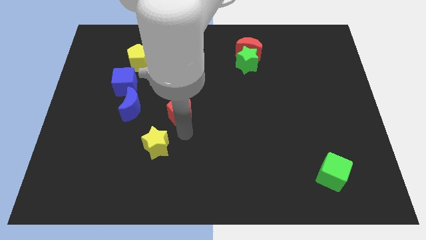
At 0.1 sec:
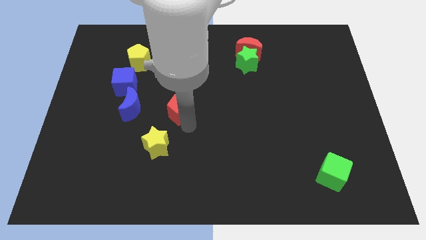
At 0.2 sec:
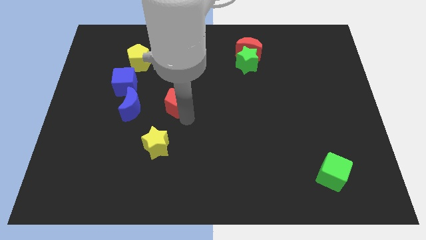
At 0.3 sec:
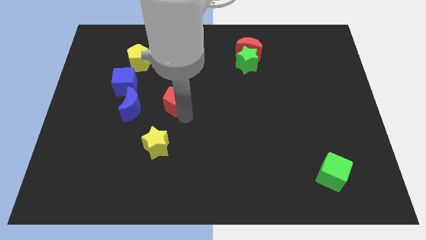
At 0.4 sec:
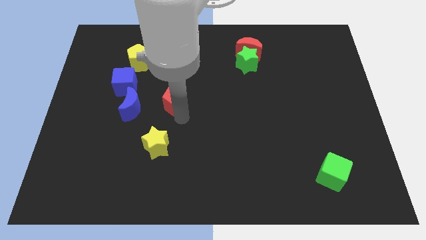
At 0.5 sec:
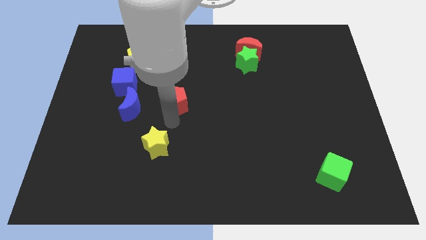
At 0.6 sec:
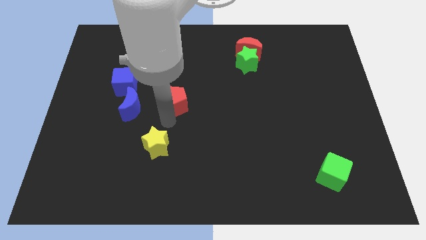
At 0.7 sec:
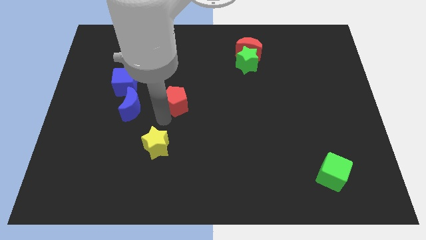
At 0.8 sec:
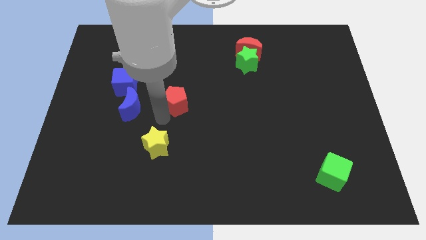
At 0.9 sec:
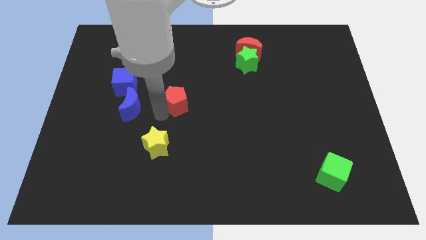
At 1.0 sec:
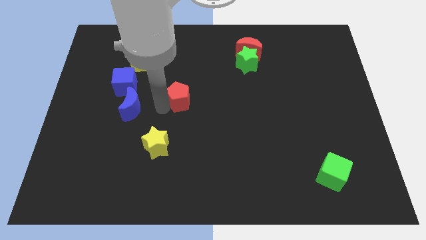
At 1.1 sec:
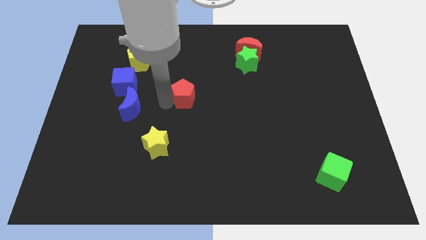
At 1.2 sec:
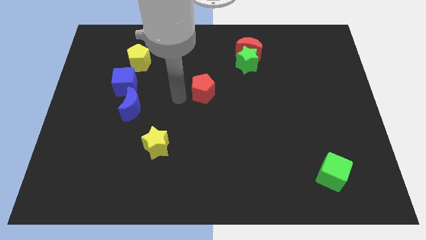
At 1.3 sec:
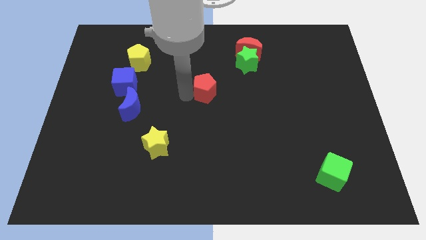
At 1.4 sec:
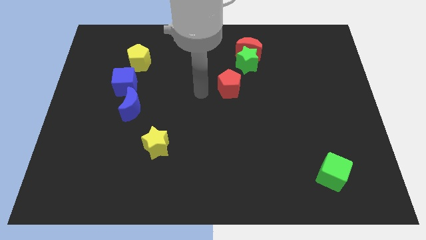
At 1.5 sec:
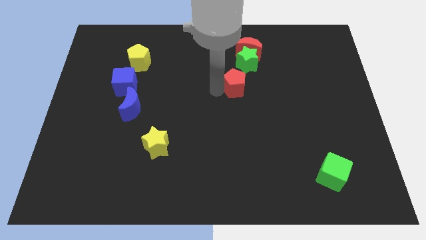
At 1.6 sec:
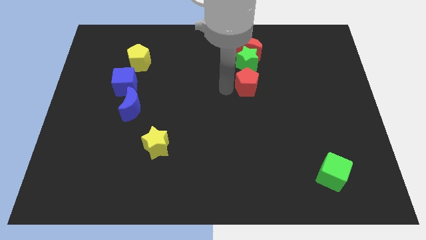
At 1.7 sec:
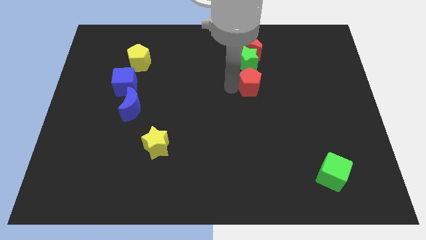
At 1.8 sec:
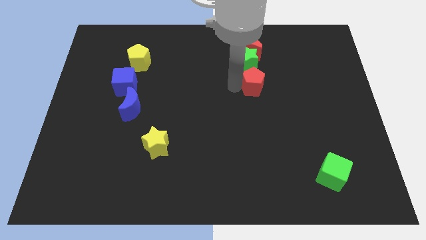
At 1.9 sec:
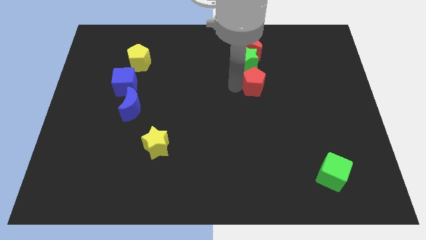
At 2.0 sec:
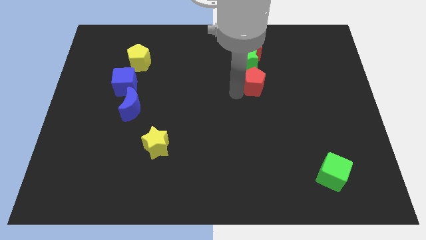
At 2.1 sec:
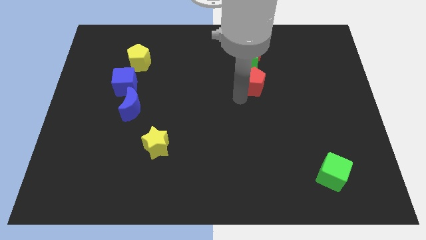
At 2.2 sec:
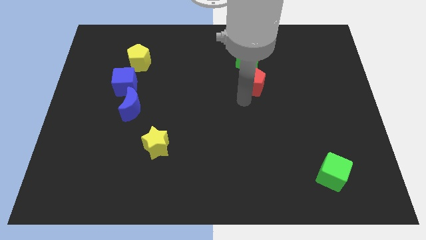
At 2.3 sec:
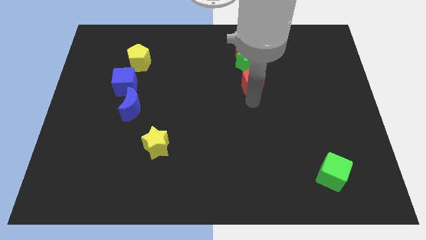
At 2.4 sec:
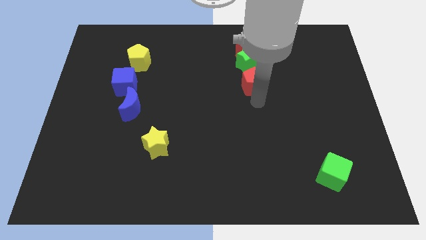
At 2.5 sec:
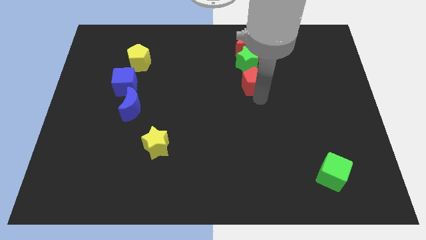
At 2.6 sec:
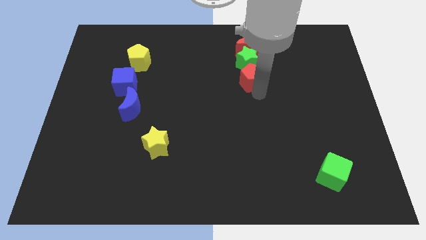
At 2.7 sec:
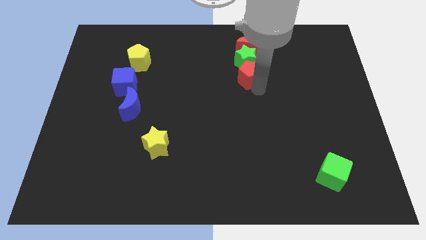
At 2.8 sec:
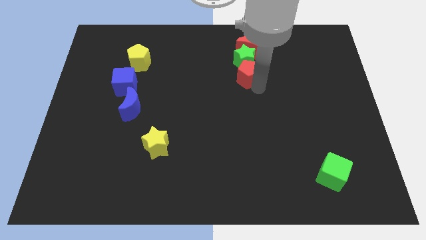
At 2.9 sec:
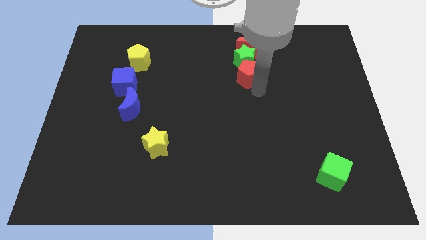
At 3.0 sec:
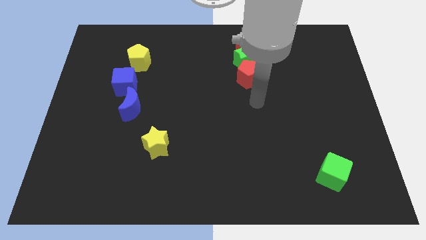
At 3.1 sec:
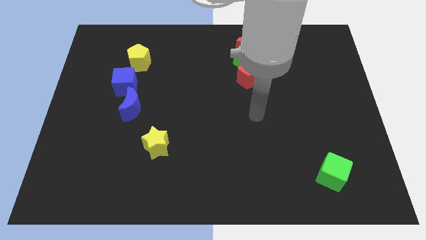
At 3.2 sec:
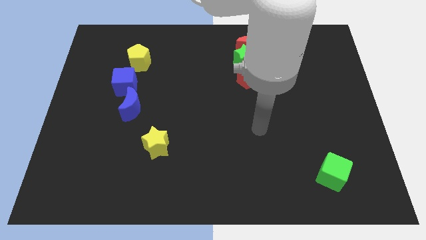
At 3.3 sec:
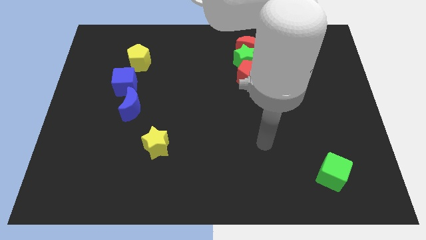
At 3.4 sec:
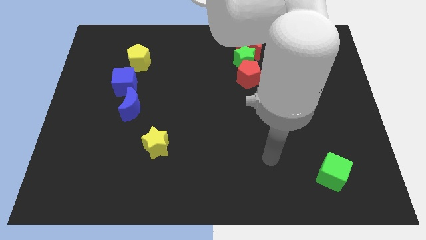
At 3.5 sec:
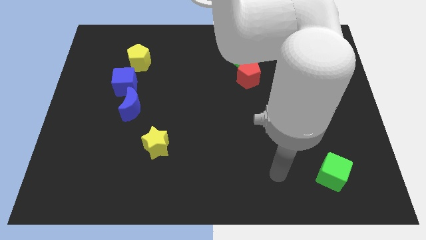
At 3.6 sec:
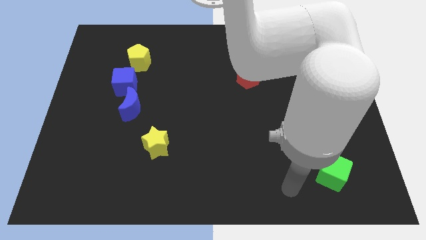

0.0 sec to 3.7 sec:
push red pentagon into the green star

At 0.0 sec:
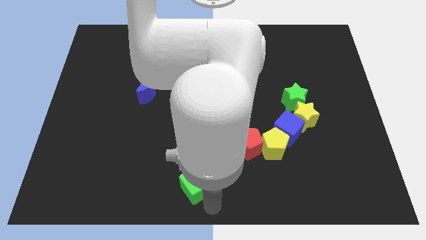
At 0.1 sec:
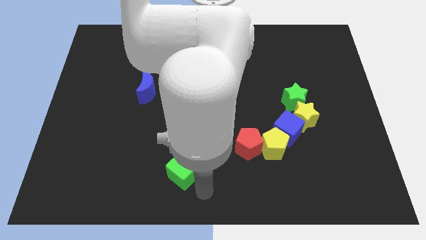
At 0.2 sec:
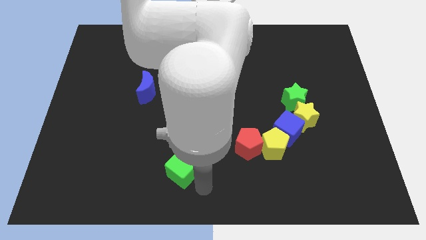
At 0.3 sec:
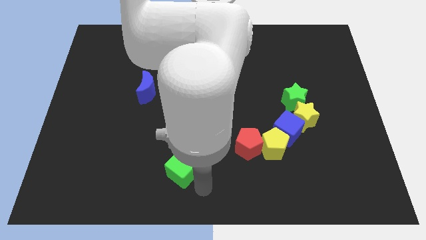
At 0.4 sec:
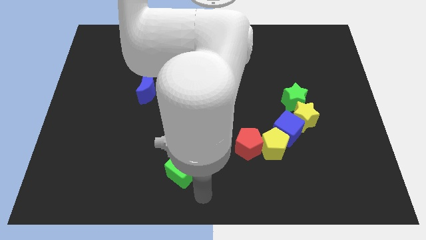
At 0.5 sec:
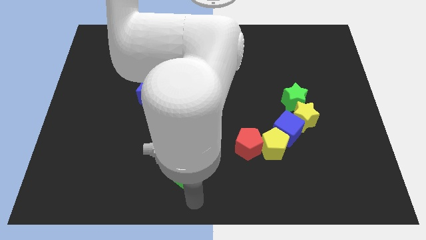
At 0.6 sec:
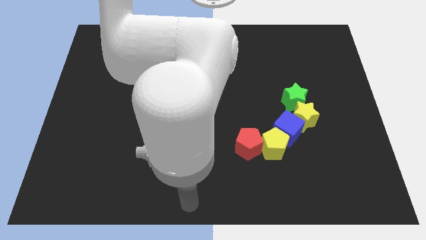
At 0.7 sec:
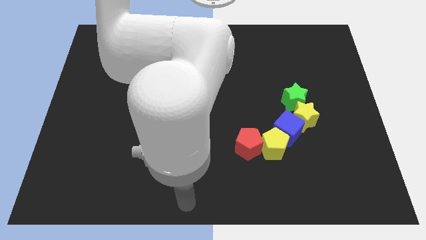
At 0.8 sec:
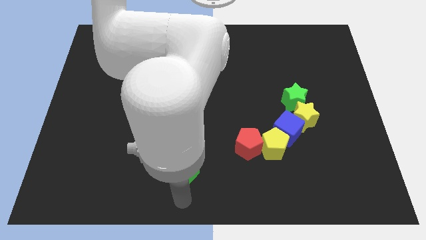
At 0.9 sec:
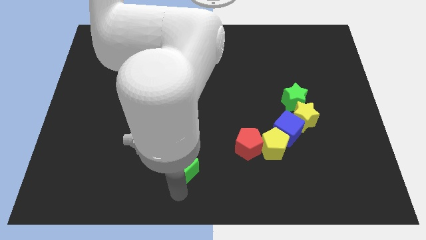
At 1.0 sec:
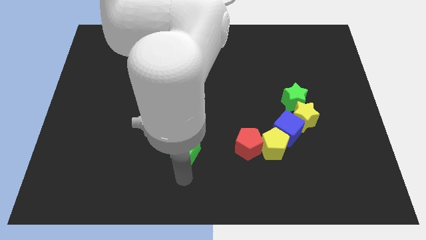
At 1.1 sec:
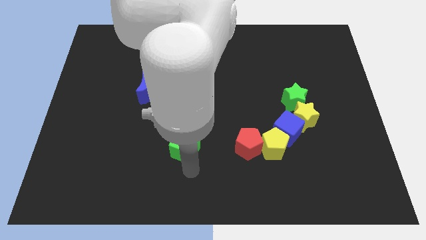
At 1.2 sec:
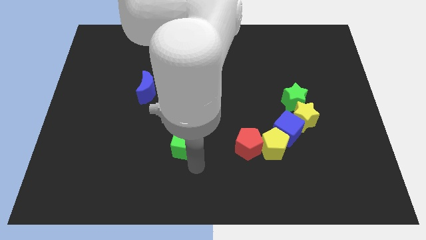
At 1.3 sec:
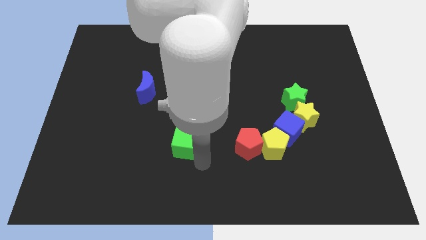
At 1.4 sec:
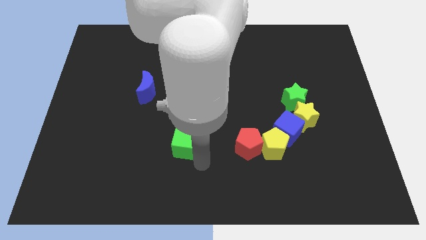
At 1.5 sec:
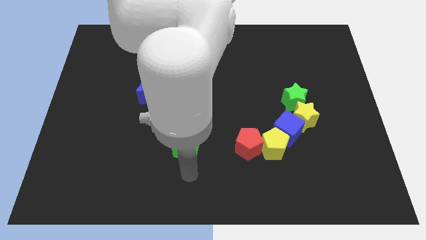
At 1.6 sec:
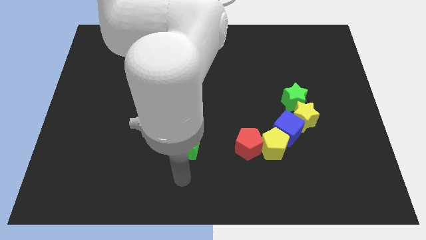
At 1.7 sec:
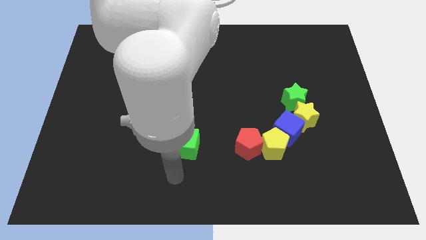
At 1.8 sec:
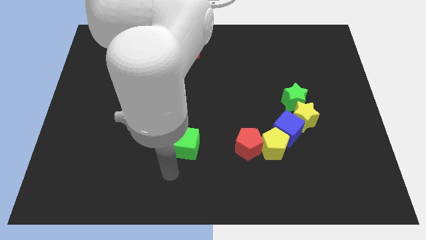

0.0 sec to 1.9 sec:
move the green cube to the left of the red pentagon

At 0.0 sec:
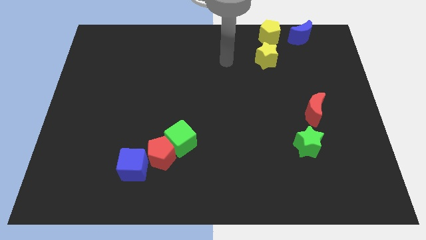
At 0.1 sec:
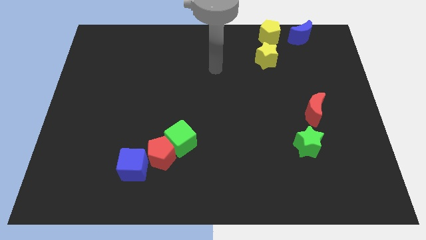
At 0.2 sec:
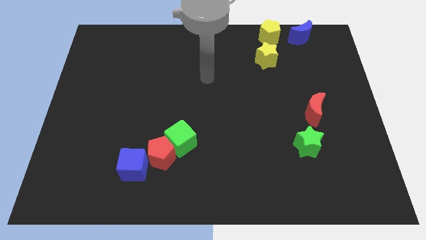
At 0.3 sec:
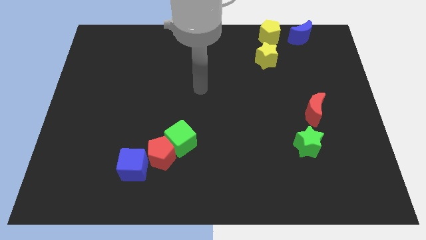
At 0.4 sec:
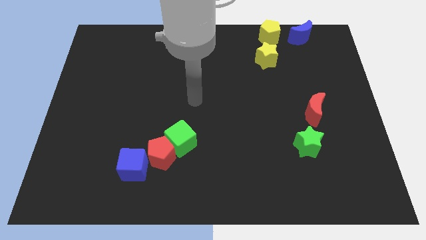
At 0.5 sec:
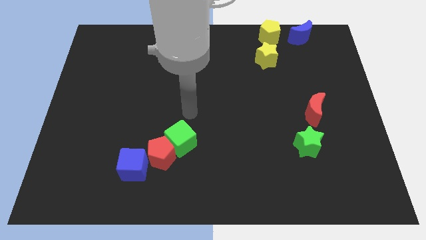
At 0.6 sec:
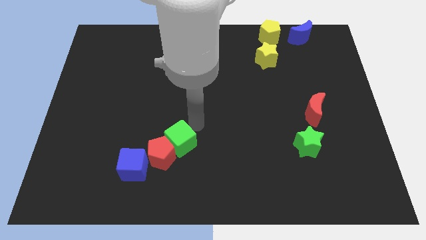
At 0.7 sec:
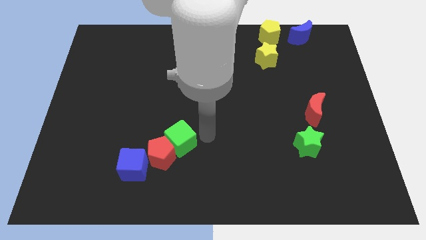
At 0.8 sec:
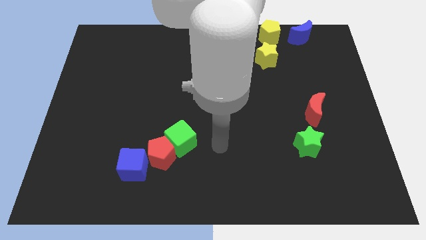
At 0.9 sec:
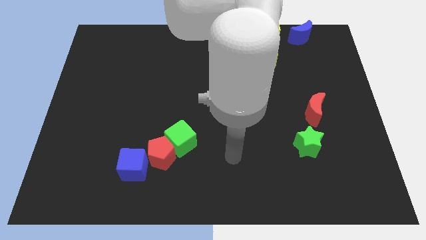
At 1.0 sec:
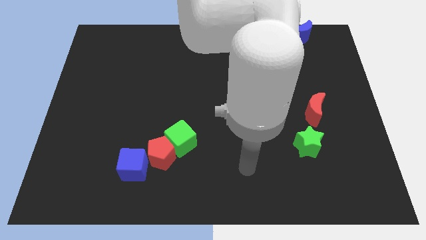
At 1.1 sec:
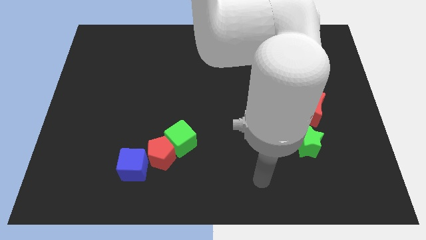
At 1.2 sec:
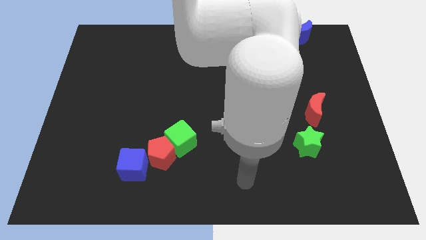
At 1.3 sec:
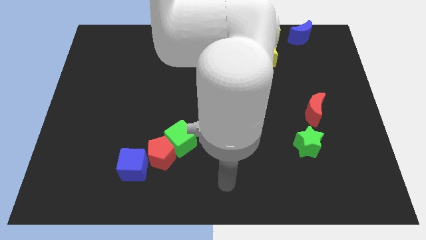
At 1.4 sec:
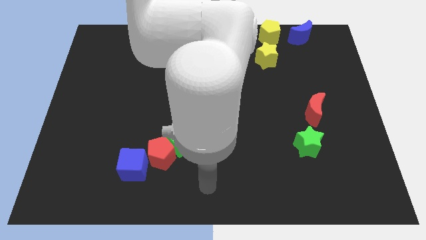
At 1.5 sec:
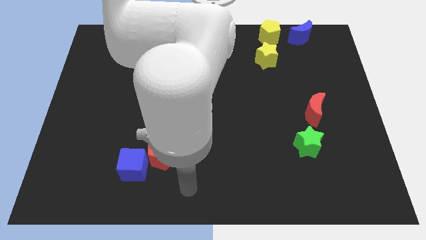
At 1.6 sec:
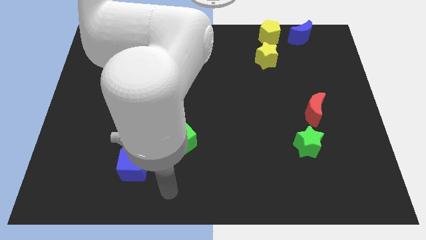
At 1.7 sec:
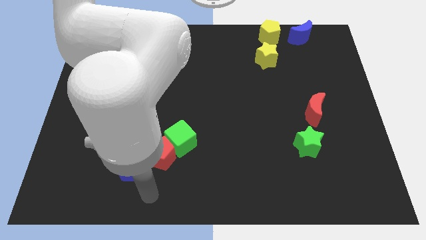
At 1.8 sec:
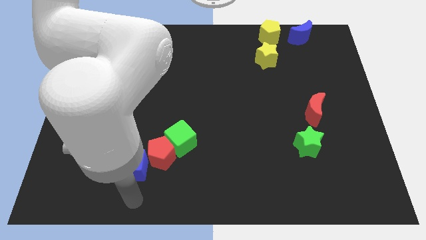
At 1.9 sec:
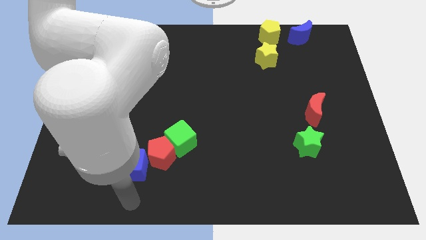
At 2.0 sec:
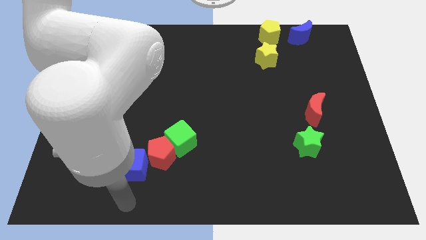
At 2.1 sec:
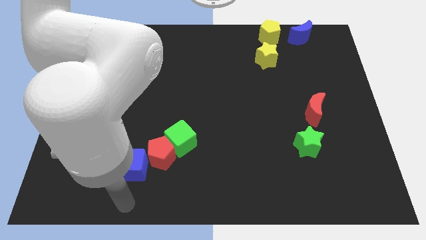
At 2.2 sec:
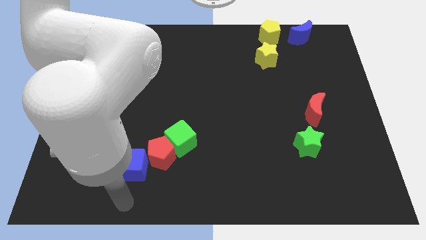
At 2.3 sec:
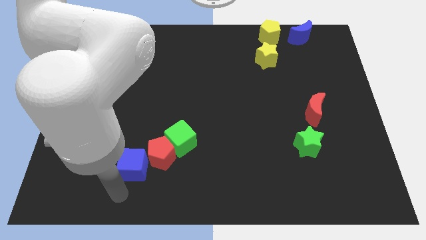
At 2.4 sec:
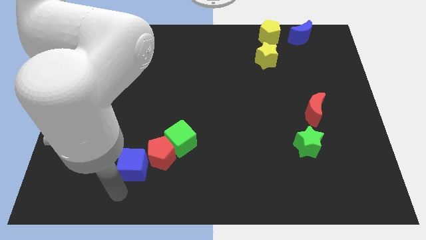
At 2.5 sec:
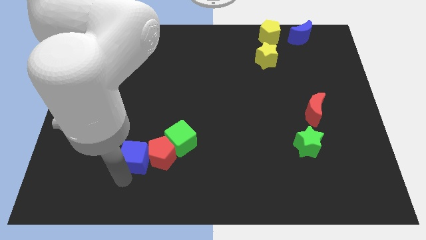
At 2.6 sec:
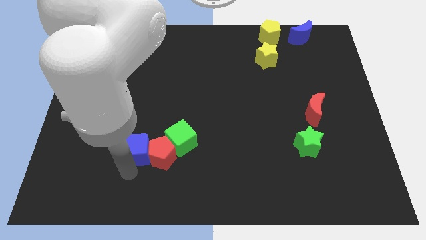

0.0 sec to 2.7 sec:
move your arm to the blue cube

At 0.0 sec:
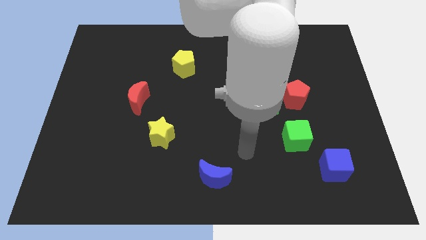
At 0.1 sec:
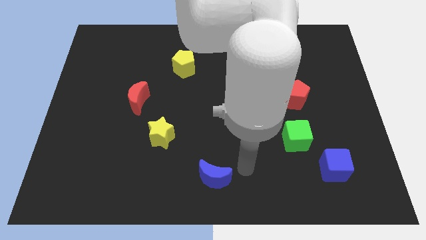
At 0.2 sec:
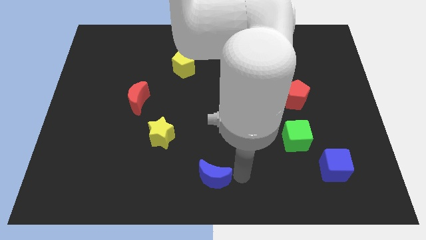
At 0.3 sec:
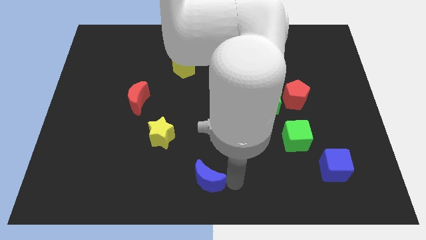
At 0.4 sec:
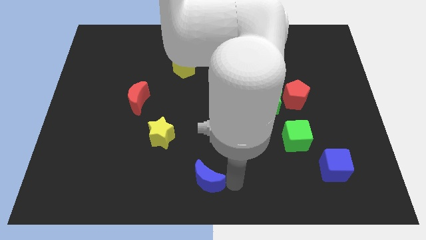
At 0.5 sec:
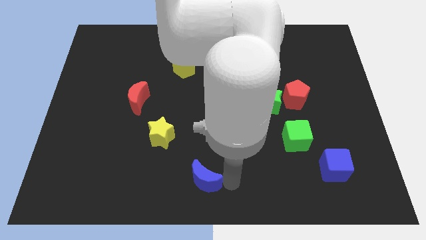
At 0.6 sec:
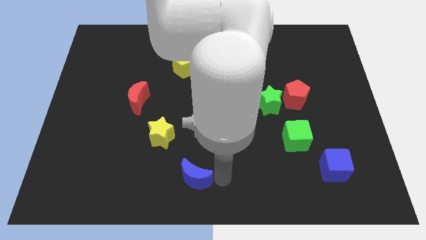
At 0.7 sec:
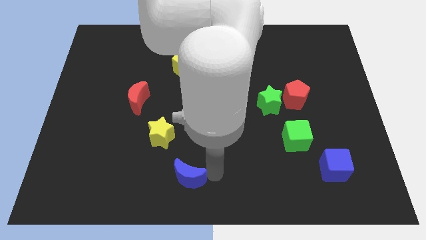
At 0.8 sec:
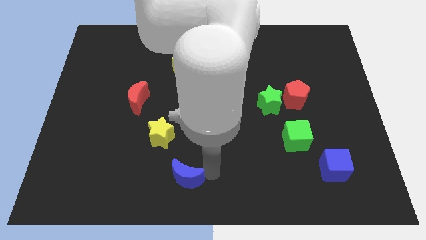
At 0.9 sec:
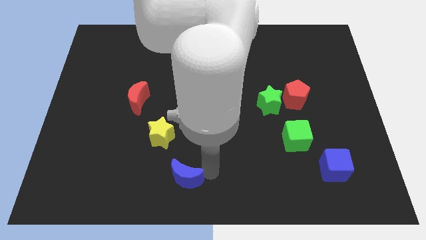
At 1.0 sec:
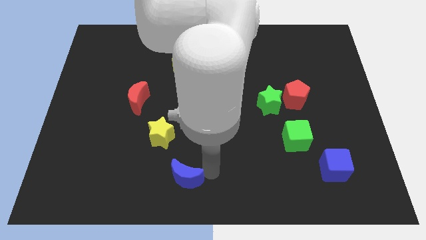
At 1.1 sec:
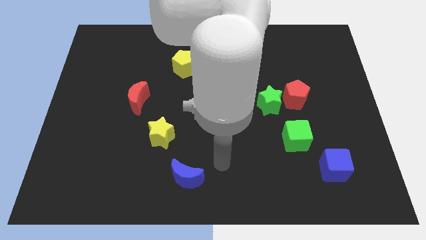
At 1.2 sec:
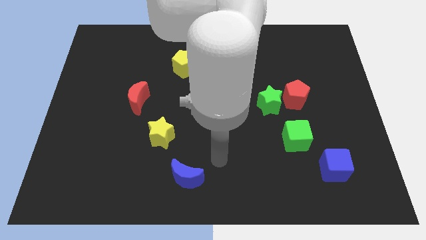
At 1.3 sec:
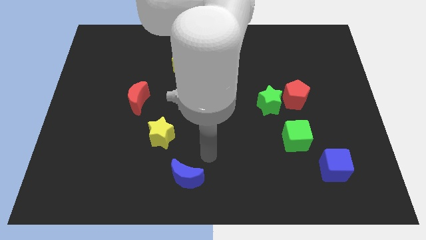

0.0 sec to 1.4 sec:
slightly move the blue moon towards the left
